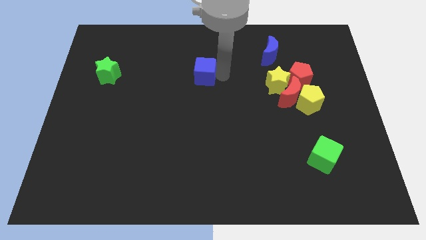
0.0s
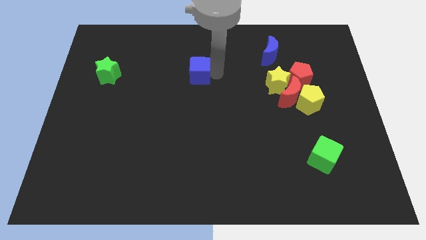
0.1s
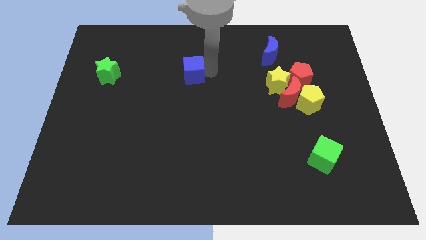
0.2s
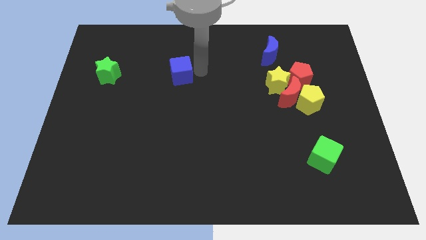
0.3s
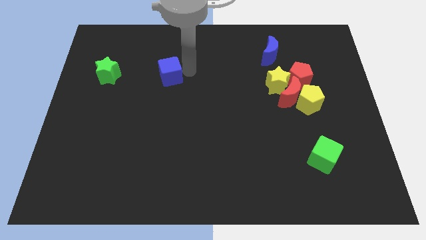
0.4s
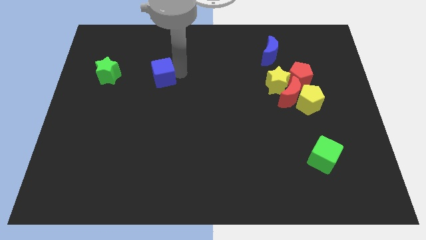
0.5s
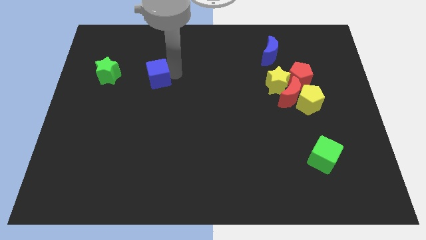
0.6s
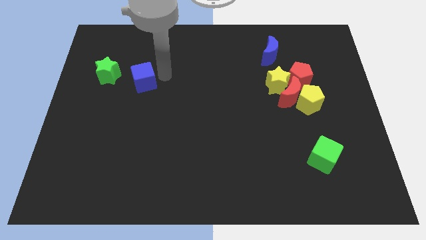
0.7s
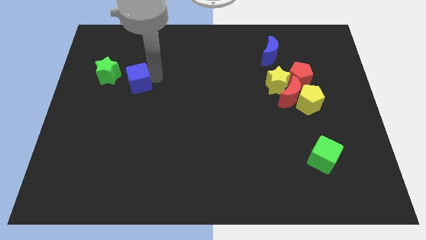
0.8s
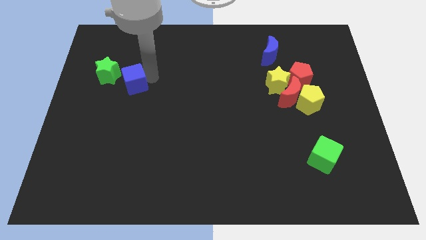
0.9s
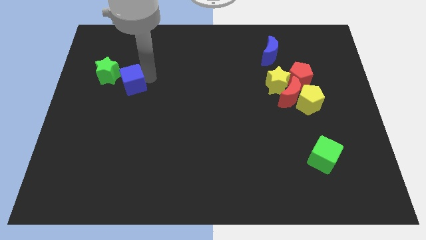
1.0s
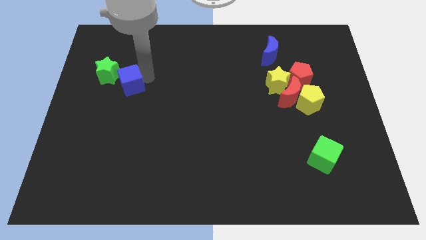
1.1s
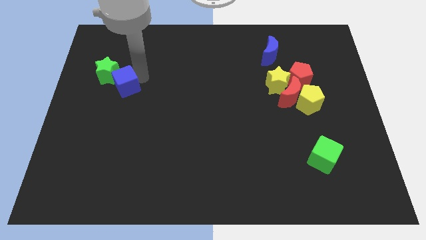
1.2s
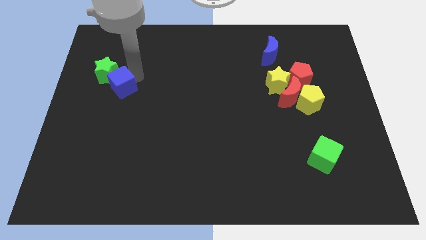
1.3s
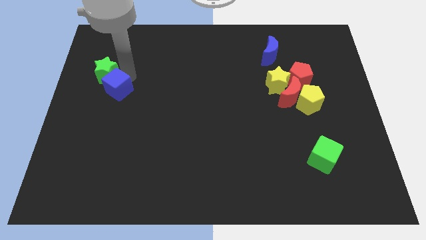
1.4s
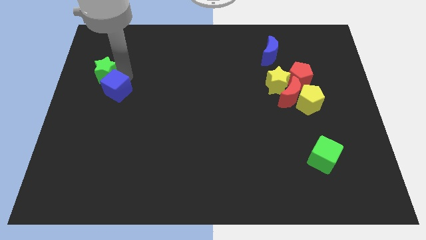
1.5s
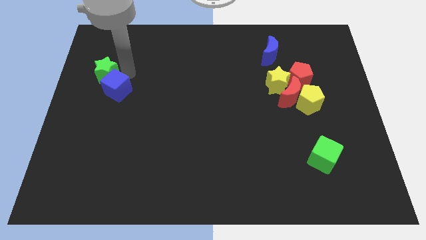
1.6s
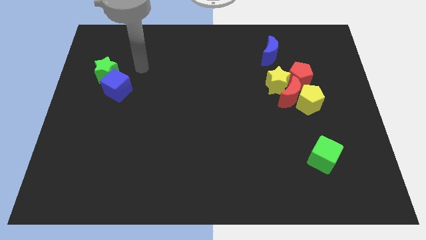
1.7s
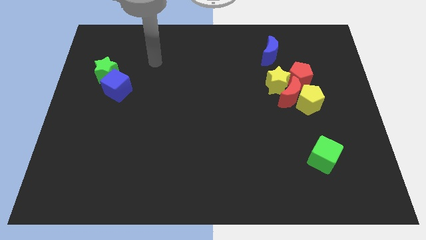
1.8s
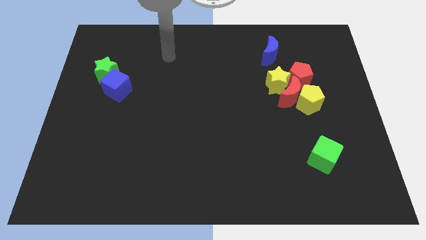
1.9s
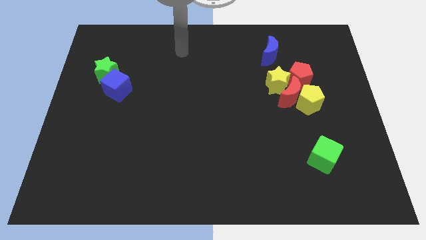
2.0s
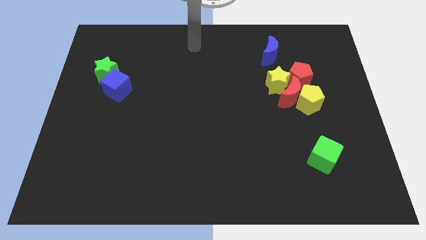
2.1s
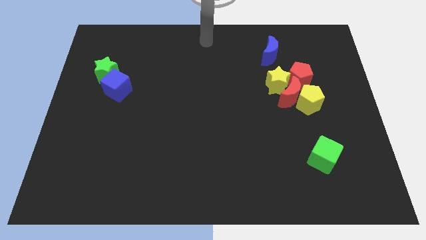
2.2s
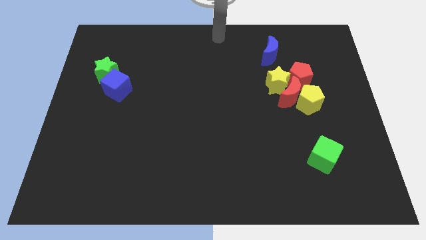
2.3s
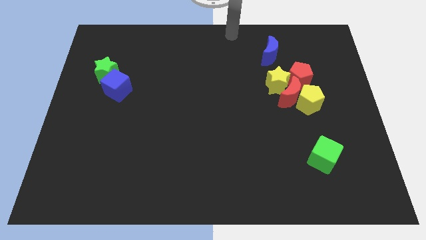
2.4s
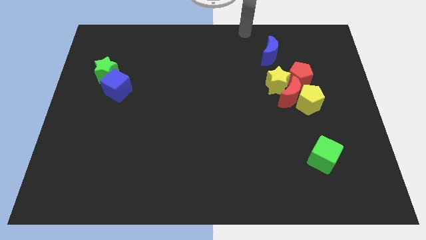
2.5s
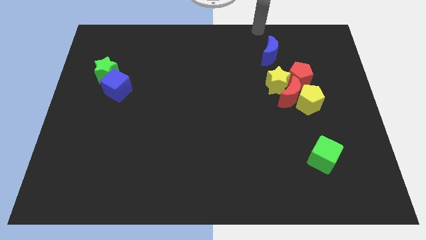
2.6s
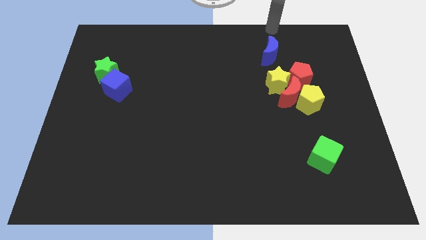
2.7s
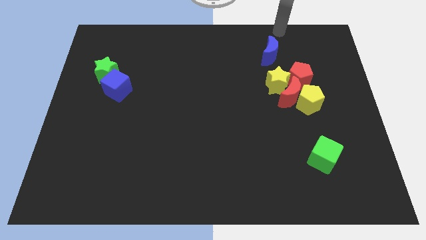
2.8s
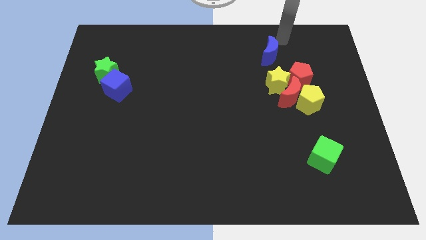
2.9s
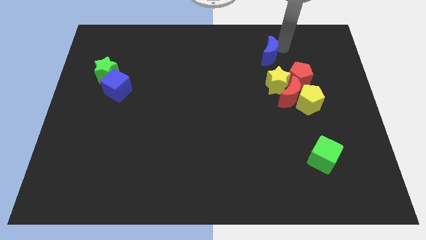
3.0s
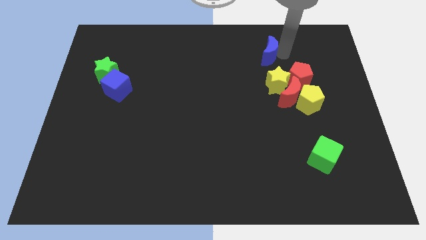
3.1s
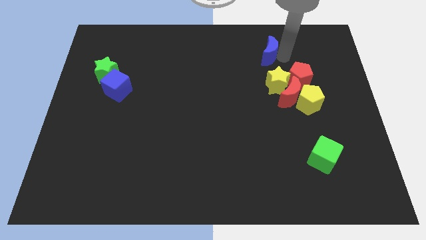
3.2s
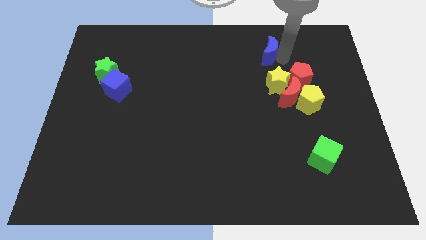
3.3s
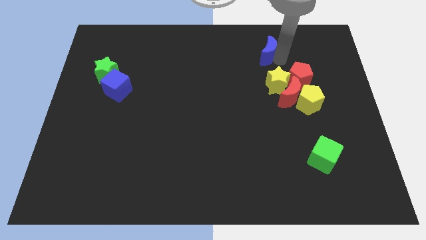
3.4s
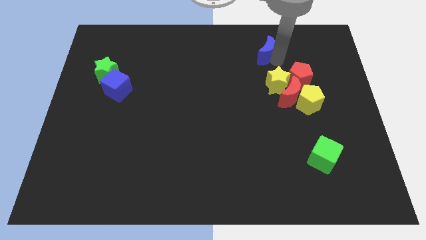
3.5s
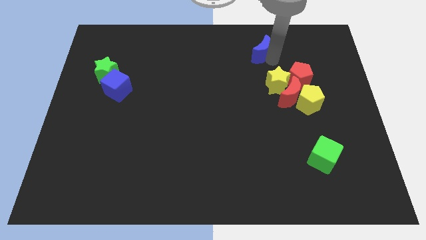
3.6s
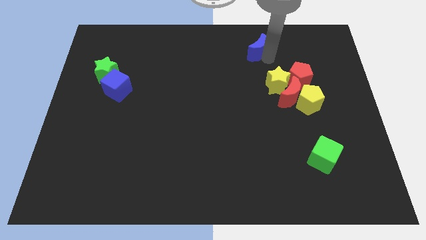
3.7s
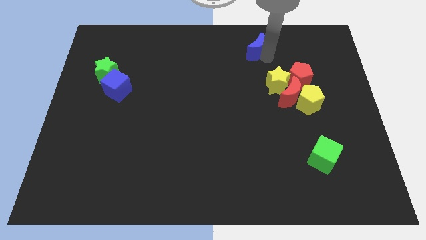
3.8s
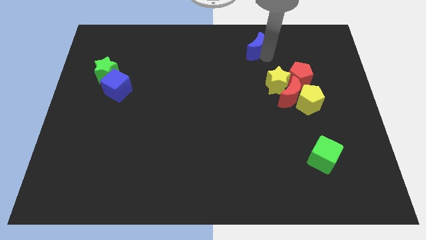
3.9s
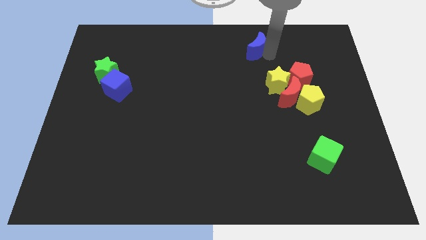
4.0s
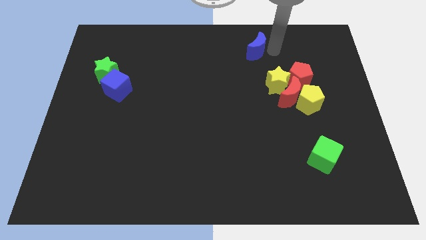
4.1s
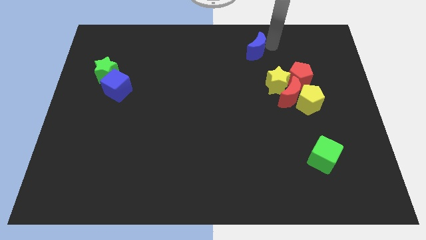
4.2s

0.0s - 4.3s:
place the blue cube to bottom of the green star

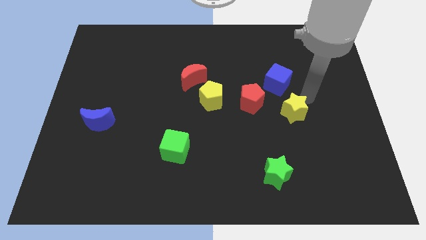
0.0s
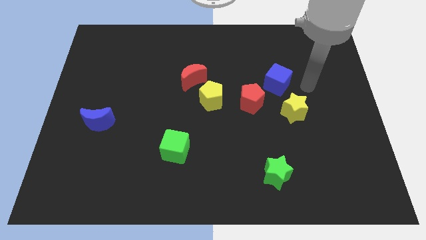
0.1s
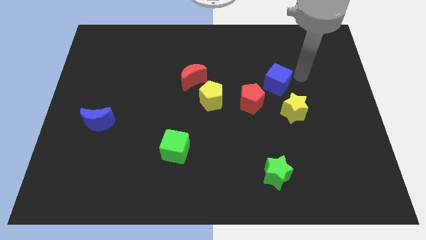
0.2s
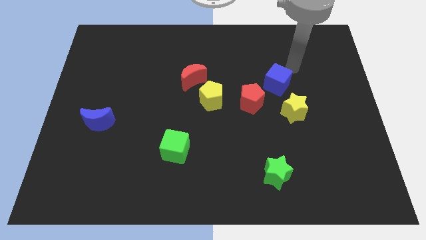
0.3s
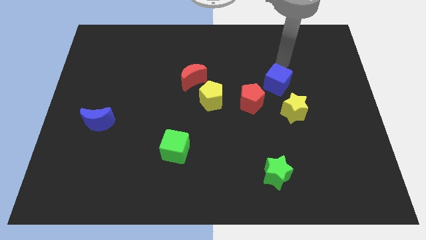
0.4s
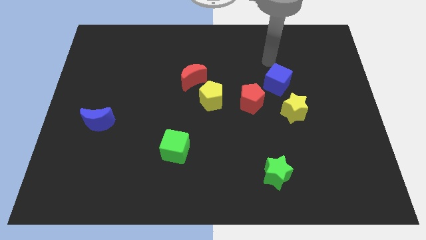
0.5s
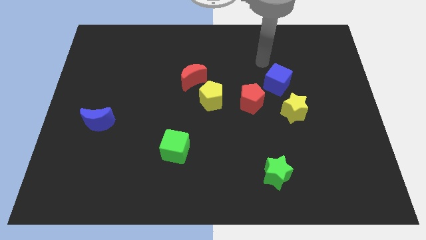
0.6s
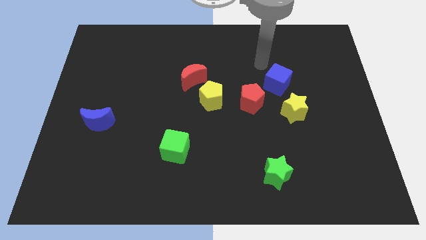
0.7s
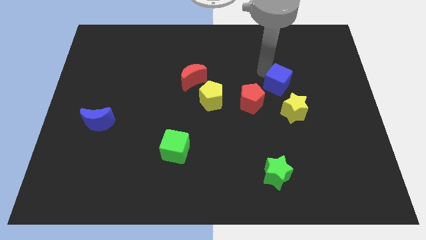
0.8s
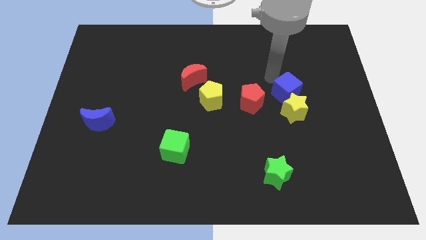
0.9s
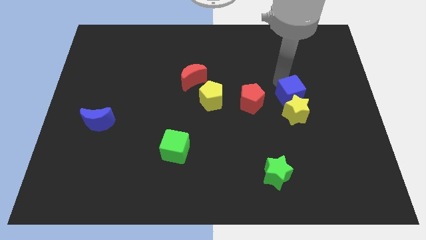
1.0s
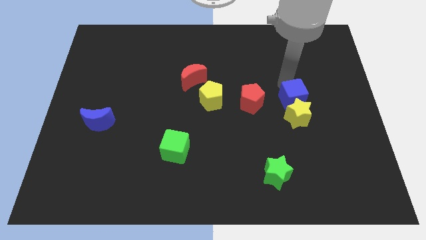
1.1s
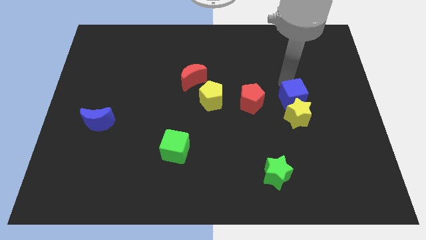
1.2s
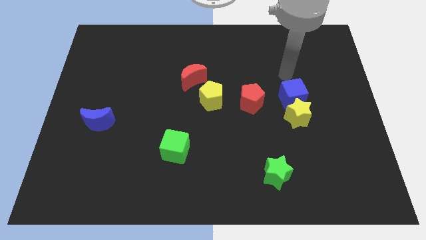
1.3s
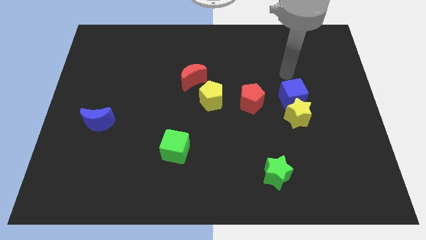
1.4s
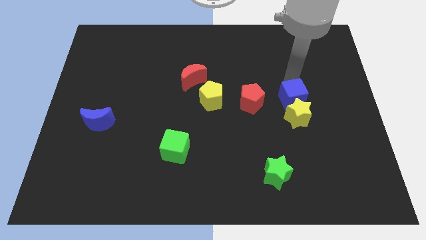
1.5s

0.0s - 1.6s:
push blue cube into the yellow star

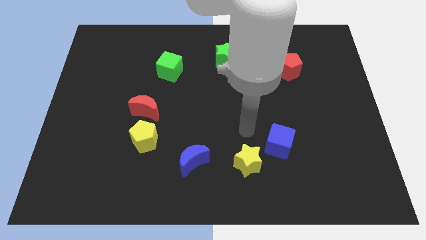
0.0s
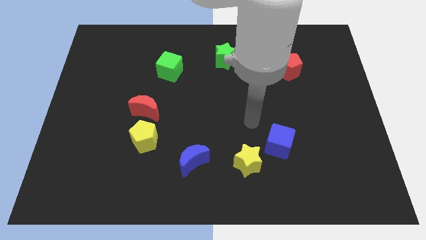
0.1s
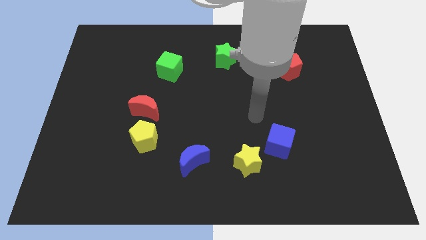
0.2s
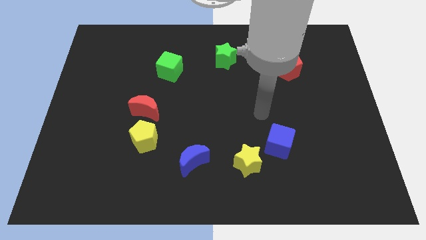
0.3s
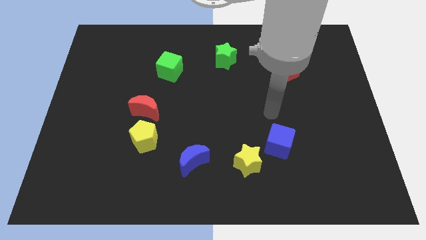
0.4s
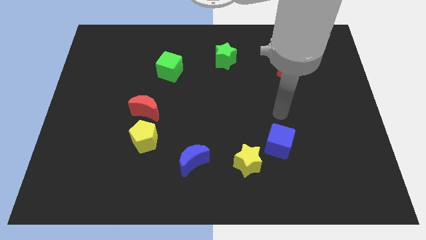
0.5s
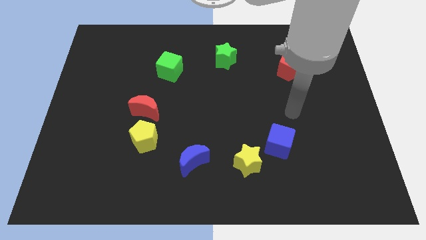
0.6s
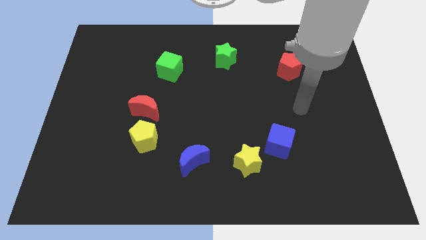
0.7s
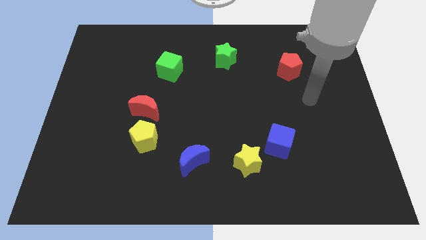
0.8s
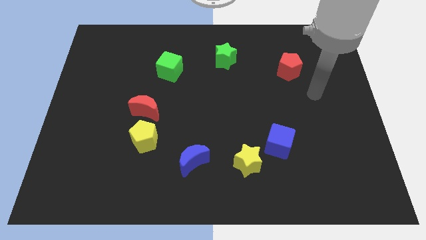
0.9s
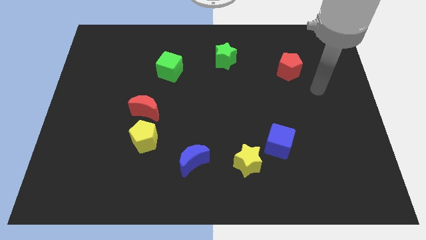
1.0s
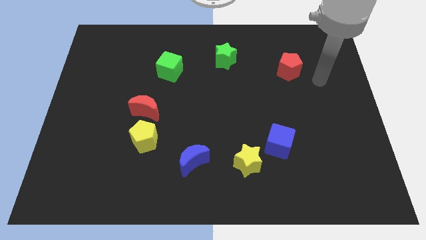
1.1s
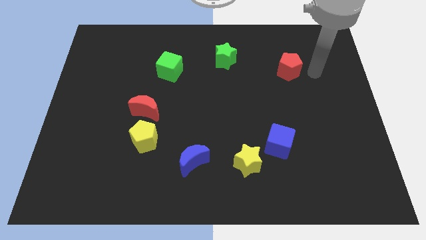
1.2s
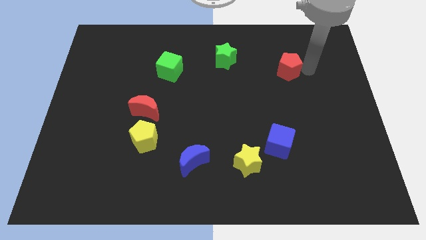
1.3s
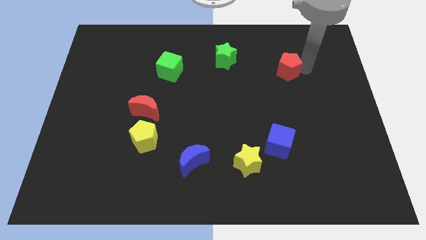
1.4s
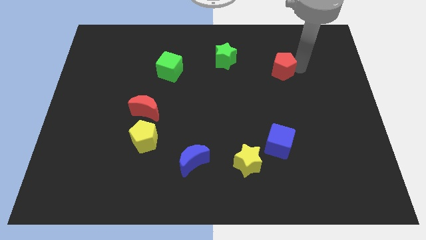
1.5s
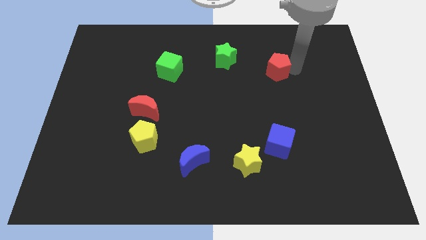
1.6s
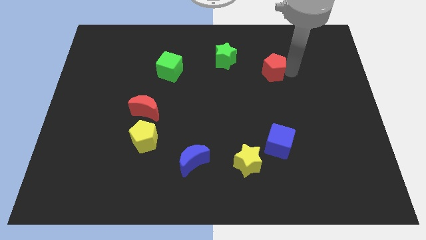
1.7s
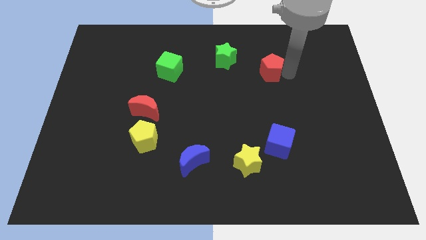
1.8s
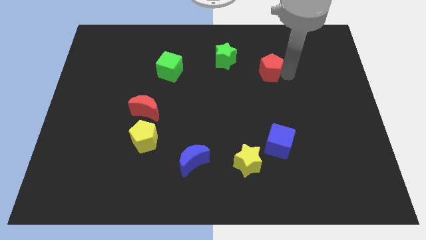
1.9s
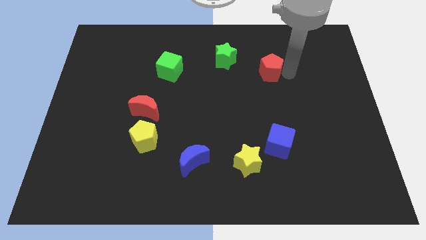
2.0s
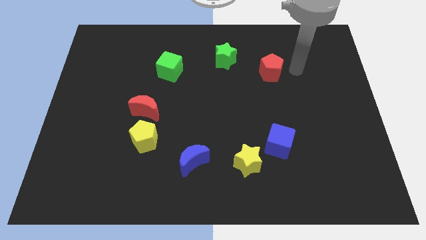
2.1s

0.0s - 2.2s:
move the red pentagon slightly to the right of the green star

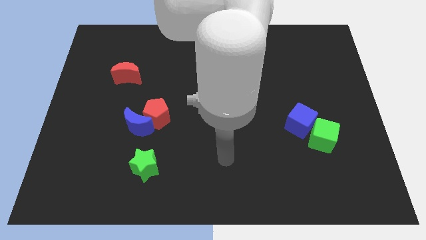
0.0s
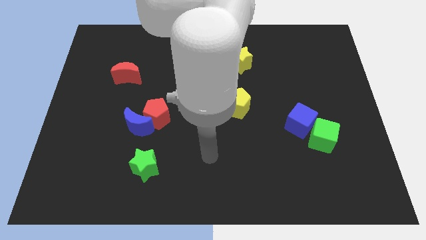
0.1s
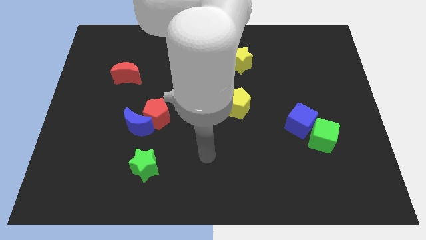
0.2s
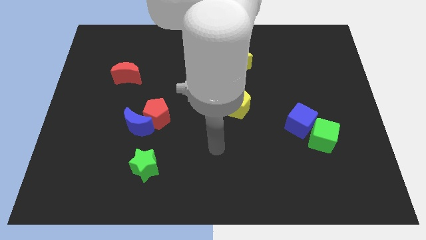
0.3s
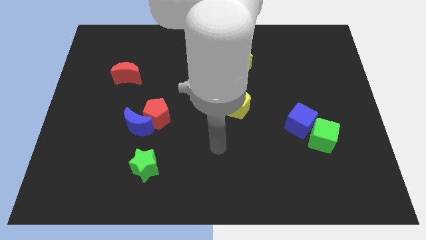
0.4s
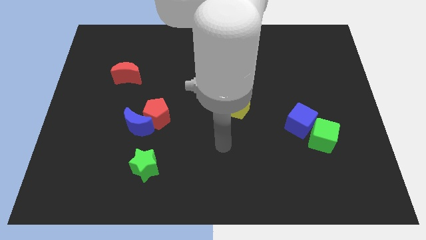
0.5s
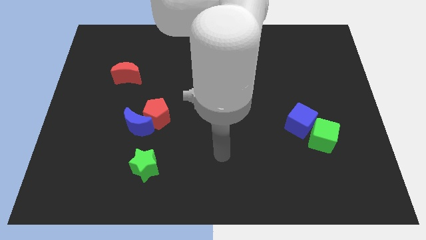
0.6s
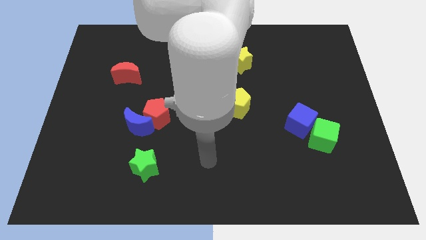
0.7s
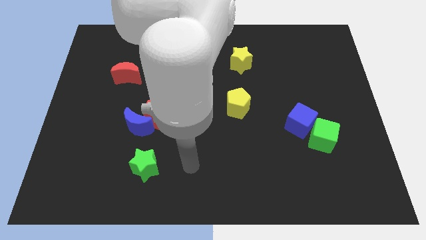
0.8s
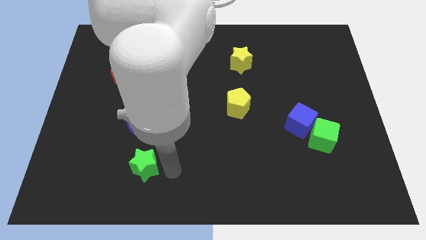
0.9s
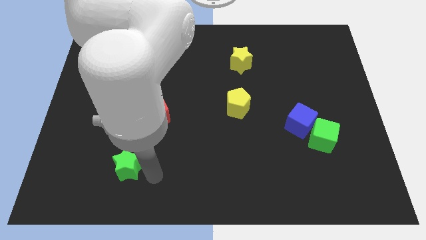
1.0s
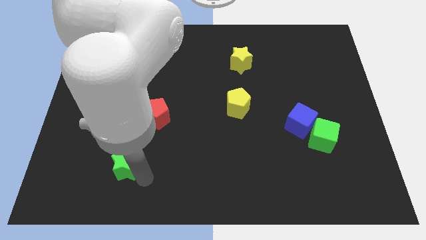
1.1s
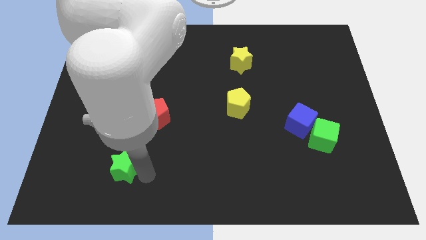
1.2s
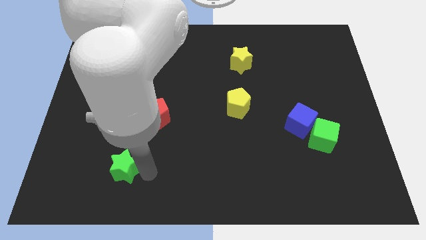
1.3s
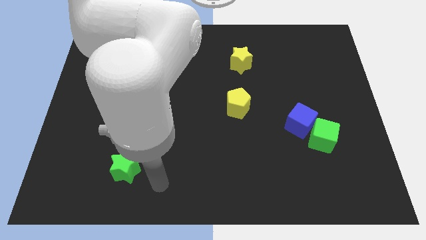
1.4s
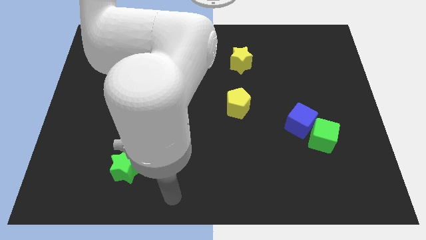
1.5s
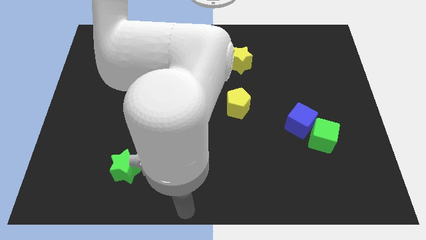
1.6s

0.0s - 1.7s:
push the green star slightly to the left
